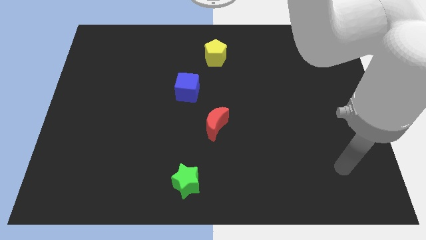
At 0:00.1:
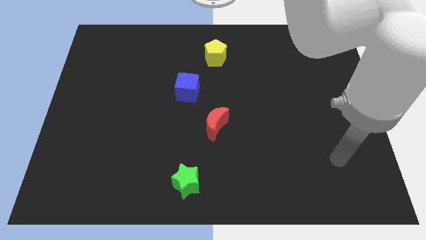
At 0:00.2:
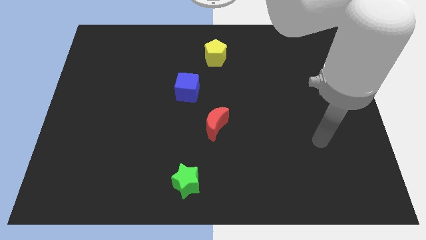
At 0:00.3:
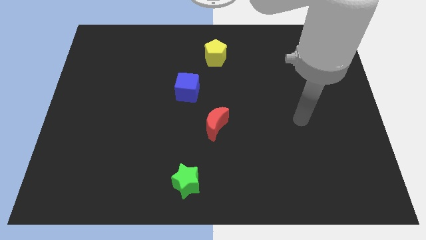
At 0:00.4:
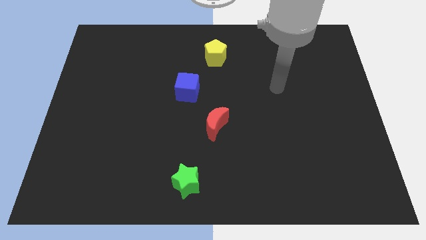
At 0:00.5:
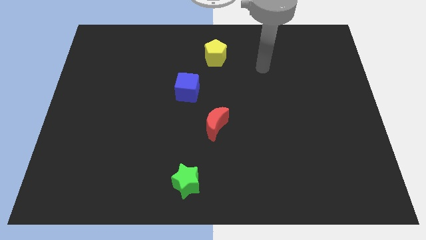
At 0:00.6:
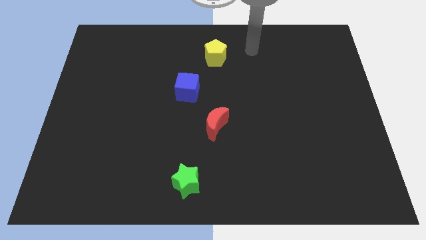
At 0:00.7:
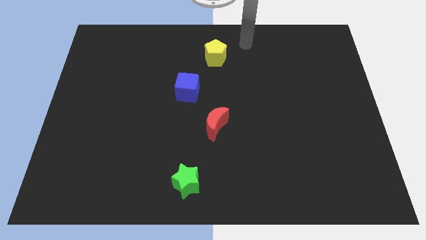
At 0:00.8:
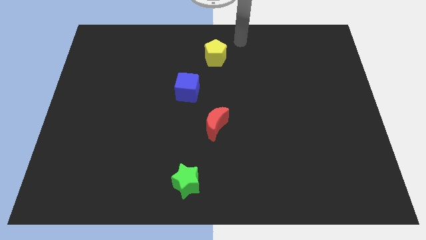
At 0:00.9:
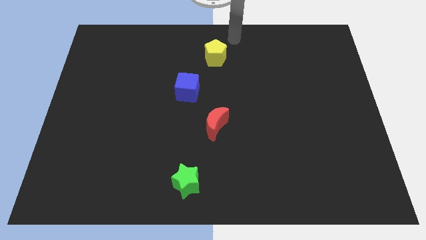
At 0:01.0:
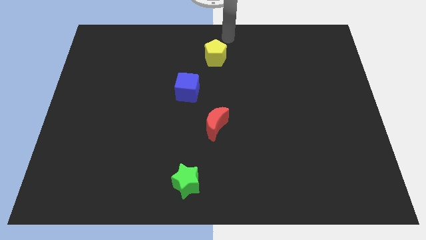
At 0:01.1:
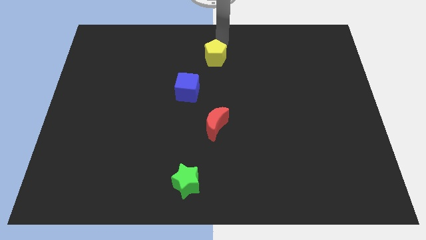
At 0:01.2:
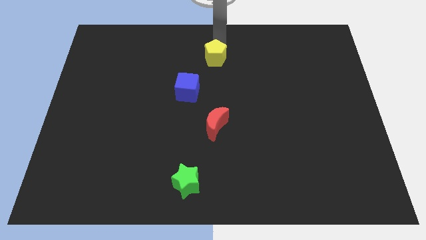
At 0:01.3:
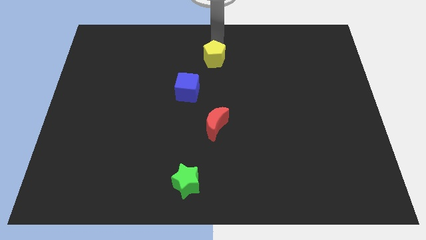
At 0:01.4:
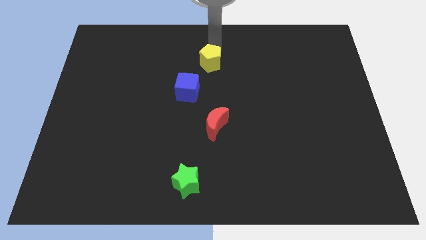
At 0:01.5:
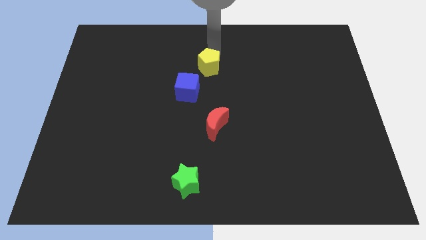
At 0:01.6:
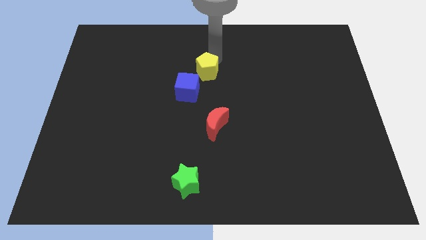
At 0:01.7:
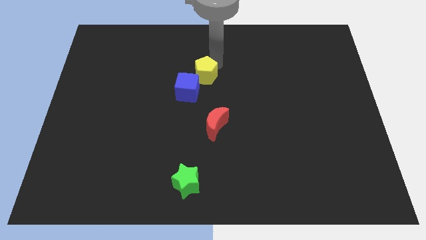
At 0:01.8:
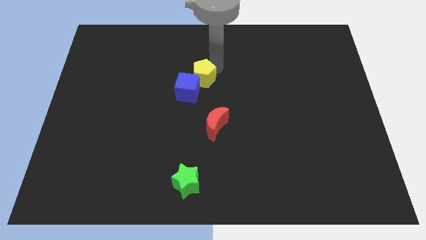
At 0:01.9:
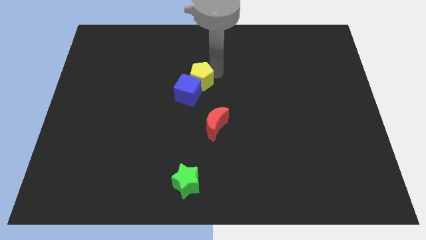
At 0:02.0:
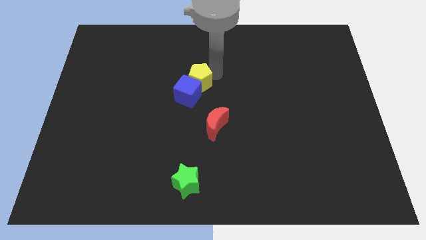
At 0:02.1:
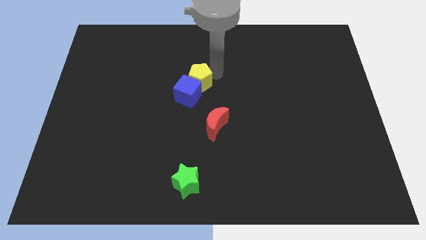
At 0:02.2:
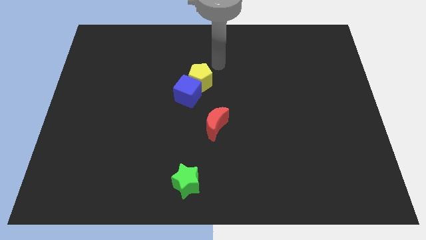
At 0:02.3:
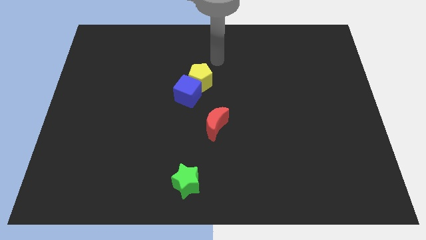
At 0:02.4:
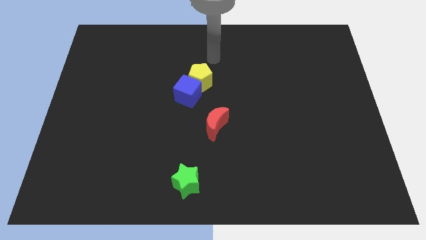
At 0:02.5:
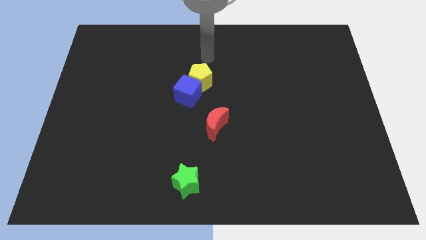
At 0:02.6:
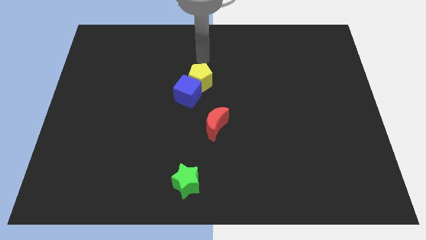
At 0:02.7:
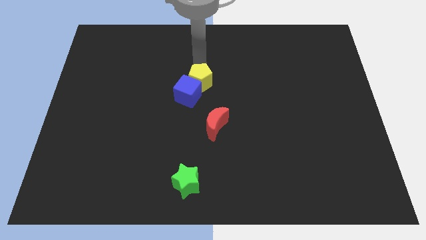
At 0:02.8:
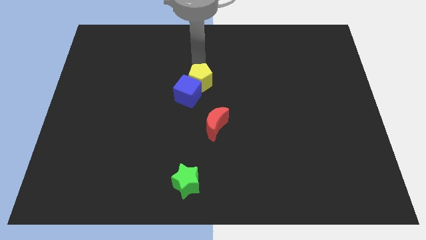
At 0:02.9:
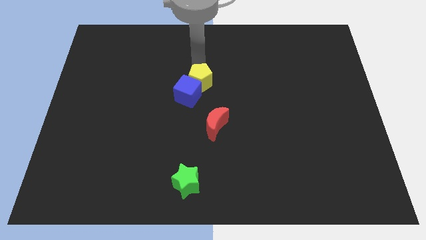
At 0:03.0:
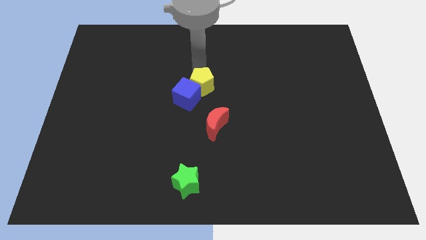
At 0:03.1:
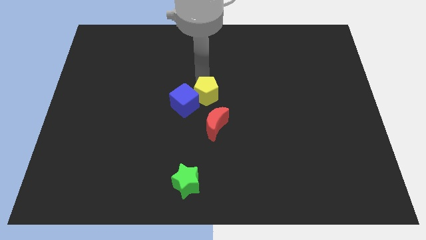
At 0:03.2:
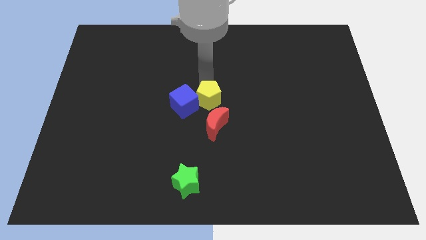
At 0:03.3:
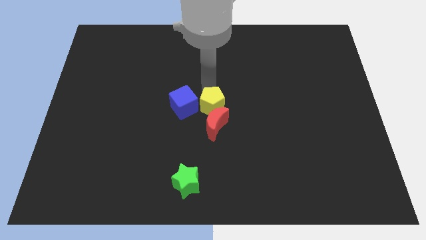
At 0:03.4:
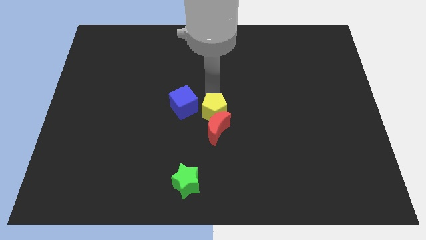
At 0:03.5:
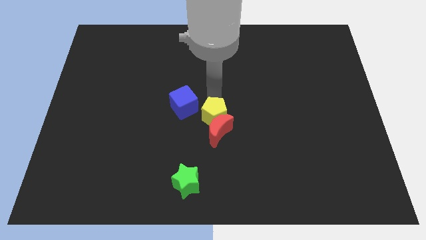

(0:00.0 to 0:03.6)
slide the yellow block to the moon

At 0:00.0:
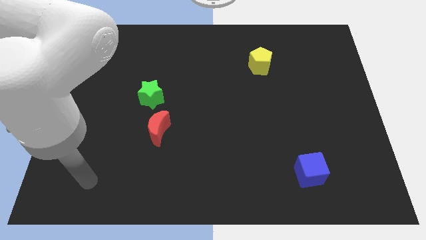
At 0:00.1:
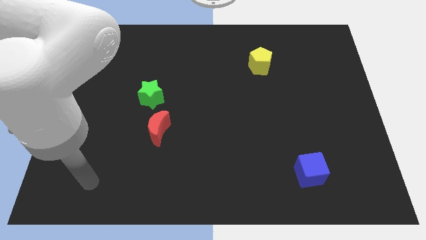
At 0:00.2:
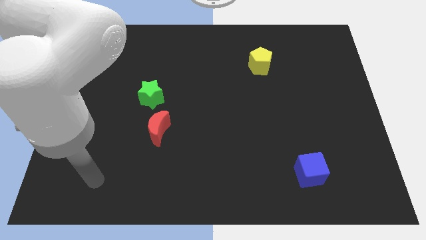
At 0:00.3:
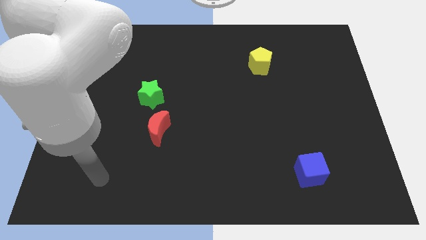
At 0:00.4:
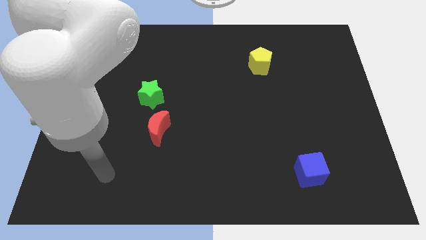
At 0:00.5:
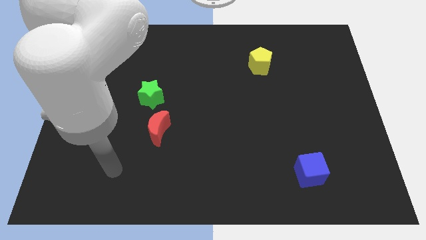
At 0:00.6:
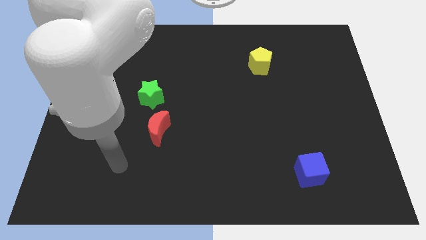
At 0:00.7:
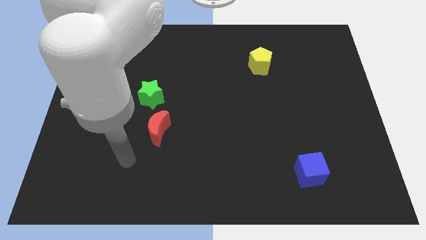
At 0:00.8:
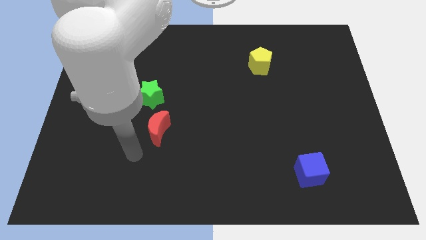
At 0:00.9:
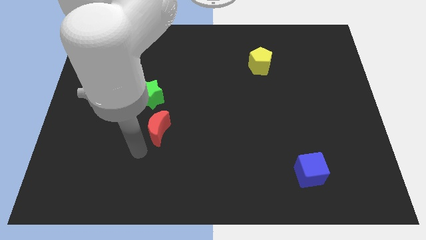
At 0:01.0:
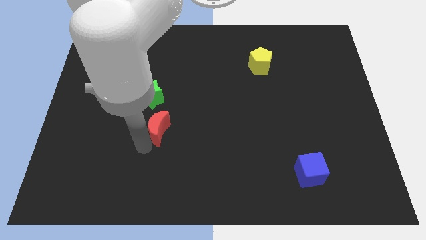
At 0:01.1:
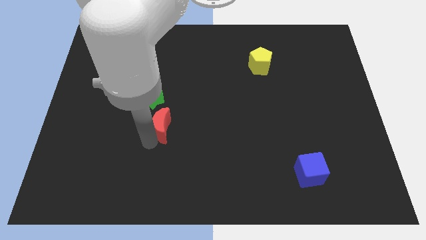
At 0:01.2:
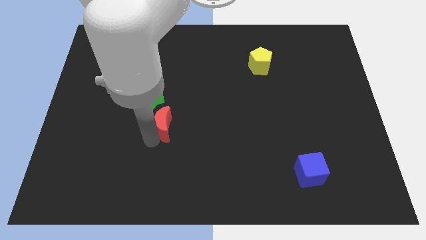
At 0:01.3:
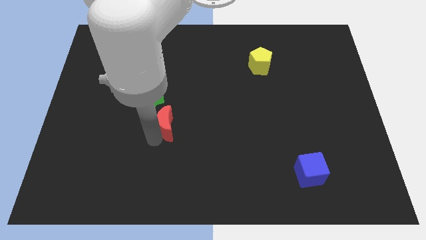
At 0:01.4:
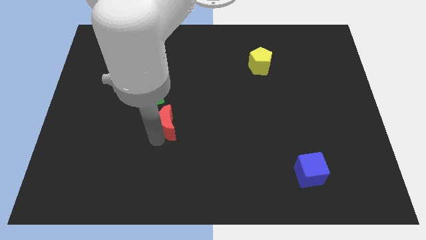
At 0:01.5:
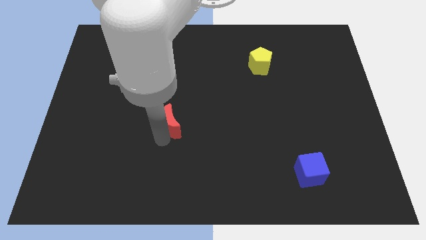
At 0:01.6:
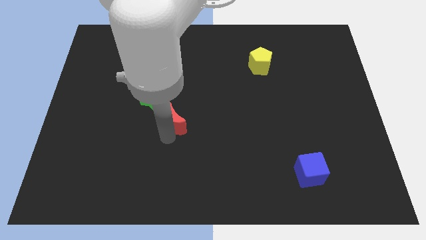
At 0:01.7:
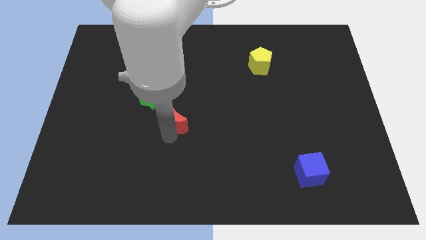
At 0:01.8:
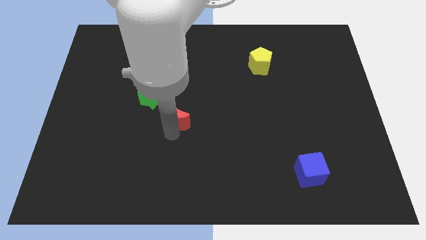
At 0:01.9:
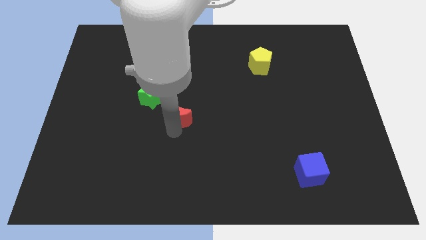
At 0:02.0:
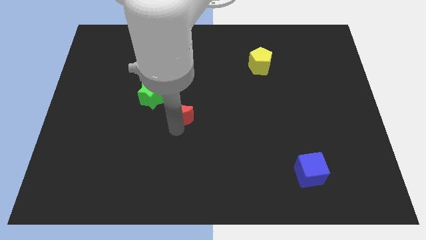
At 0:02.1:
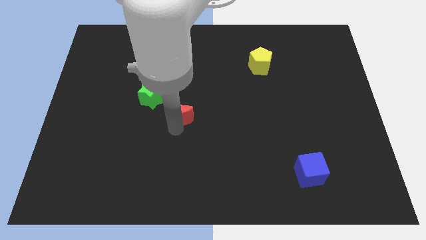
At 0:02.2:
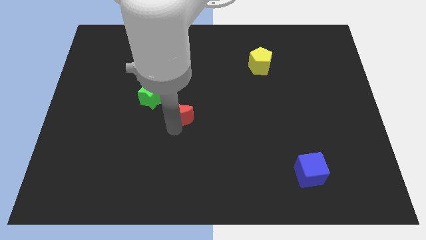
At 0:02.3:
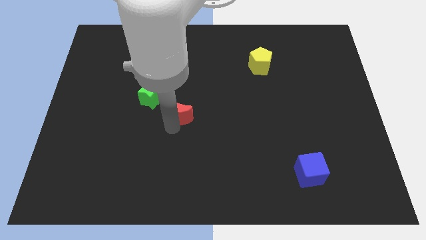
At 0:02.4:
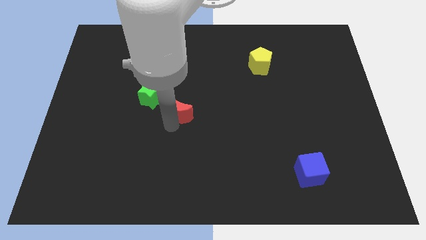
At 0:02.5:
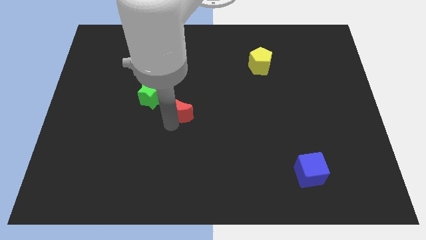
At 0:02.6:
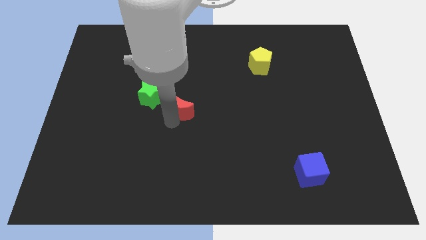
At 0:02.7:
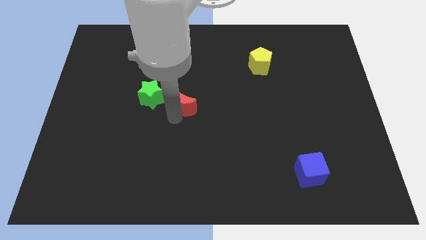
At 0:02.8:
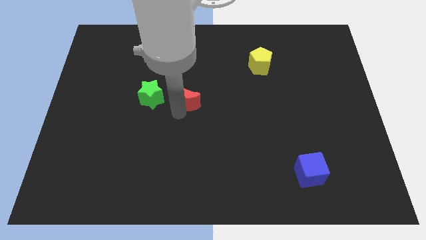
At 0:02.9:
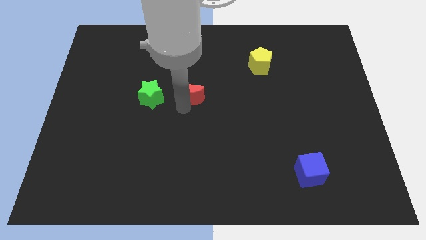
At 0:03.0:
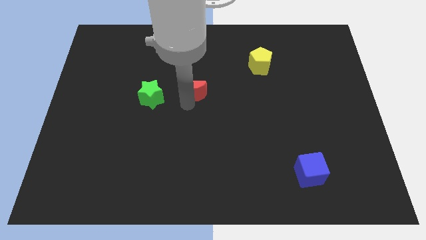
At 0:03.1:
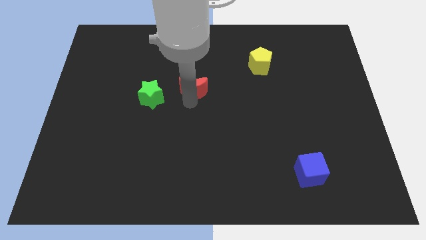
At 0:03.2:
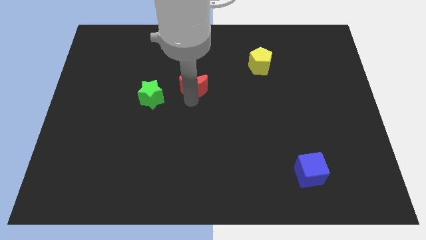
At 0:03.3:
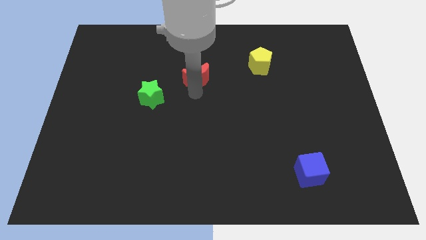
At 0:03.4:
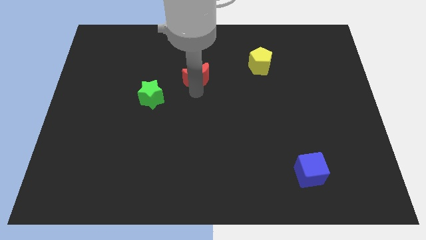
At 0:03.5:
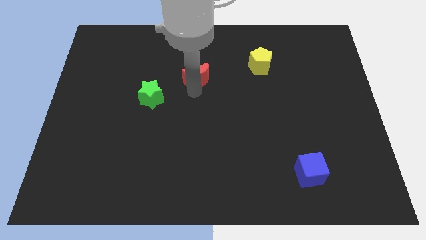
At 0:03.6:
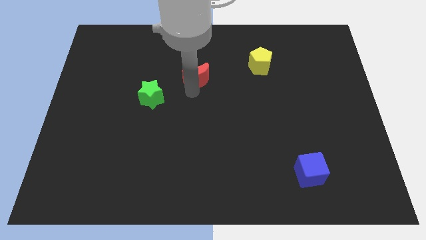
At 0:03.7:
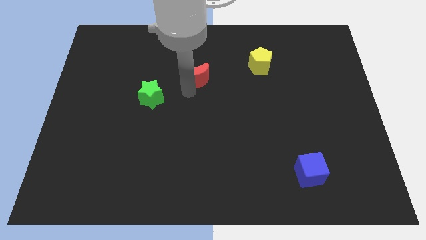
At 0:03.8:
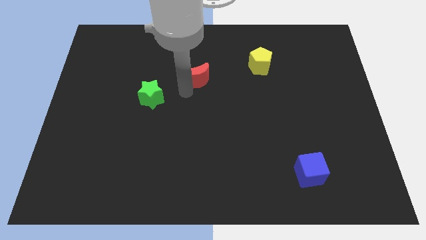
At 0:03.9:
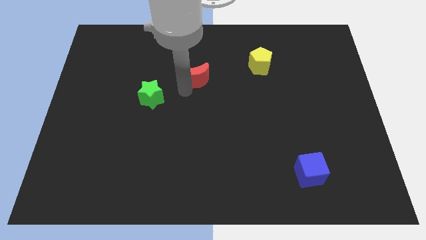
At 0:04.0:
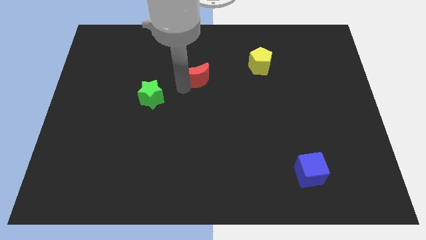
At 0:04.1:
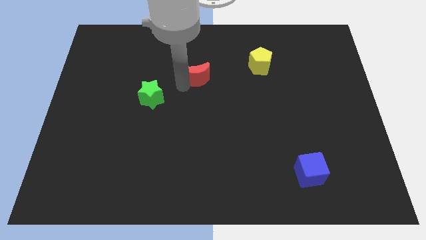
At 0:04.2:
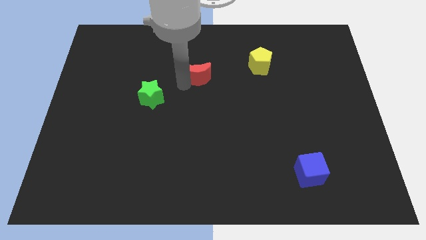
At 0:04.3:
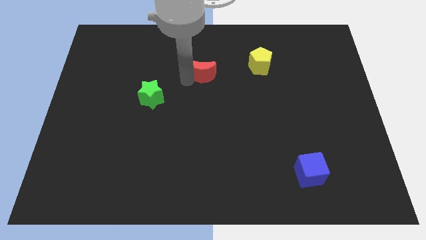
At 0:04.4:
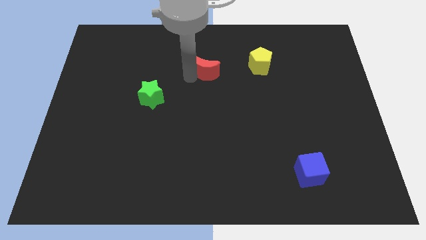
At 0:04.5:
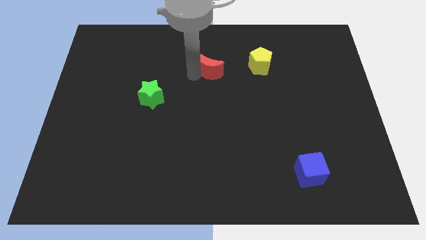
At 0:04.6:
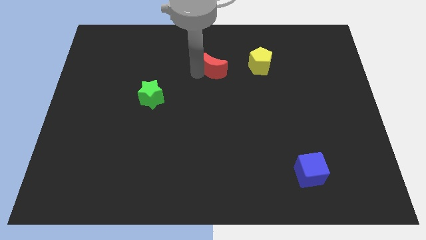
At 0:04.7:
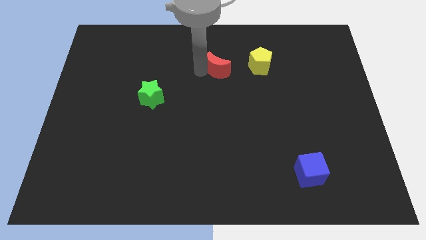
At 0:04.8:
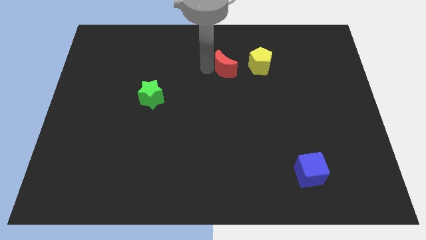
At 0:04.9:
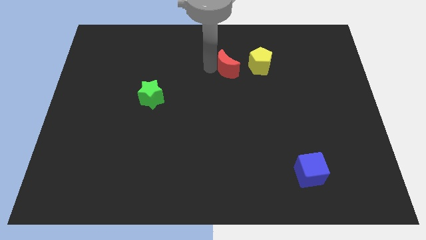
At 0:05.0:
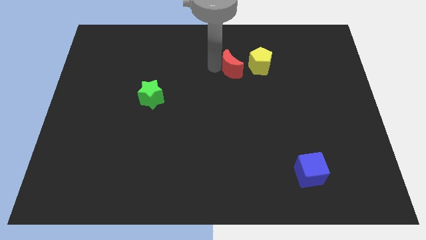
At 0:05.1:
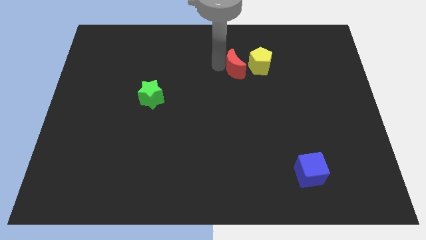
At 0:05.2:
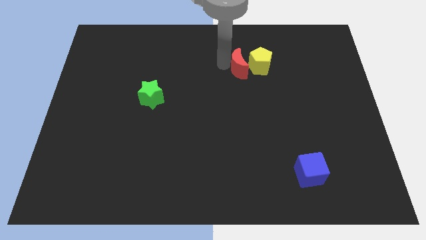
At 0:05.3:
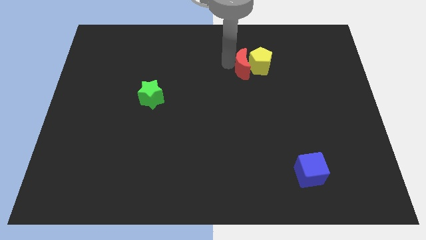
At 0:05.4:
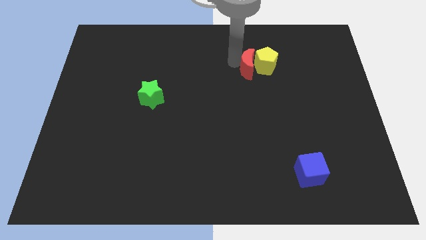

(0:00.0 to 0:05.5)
move the red block next to the yellow pentagon
